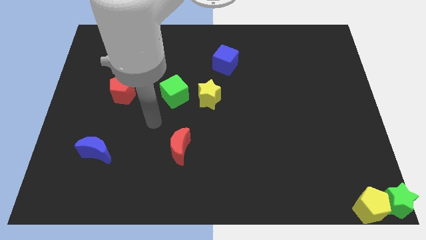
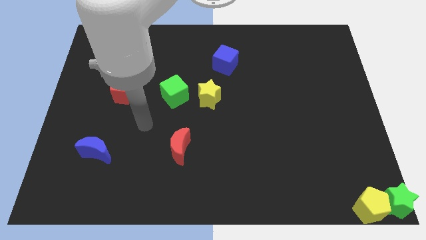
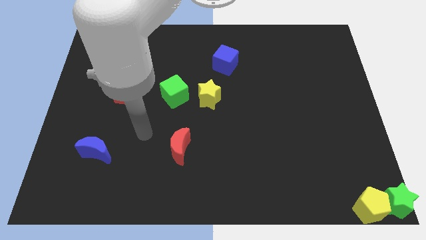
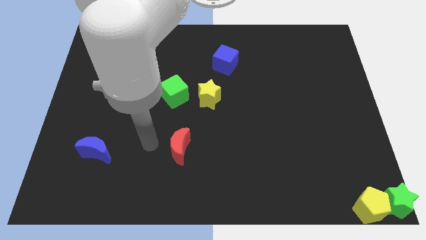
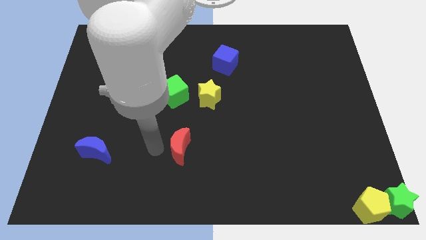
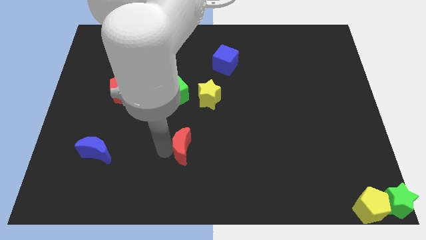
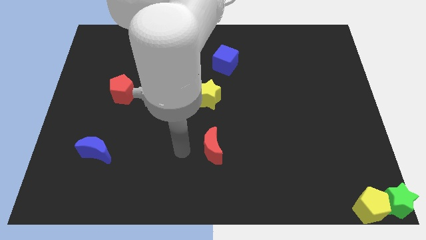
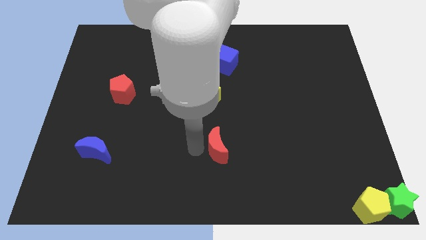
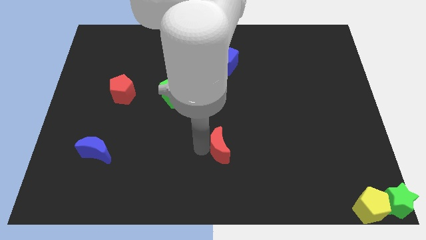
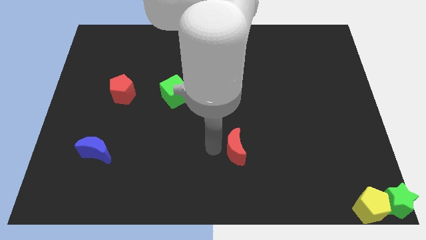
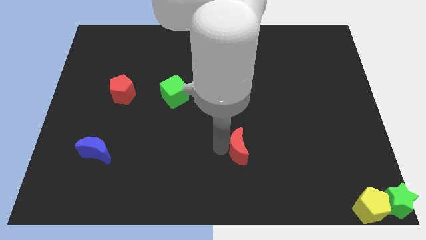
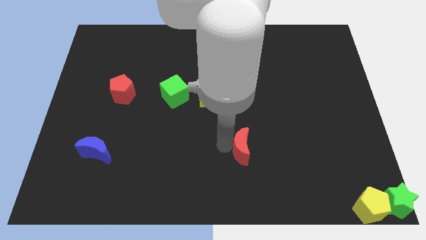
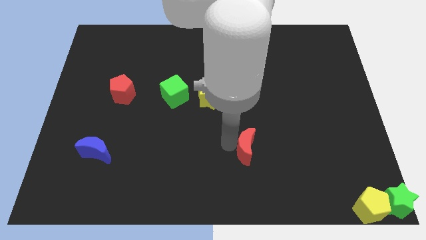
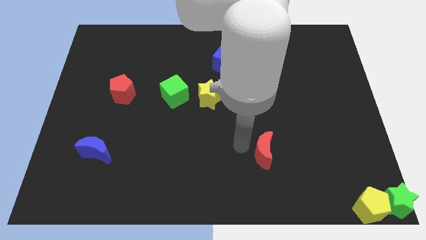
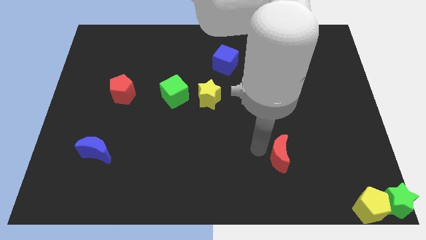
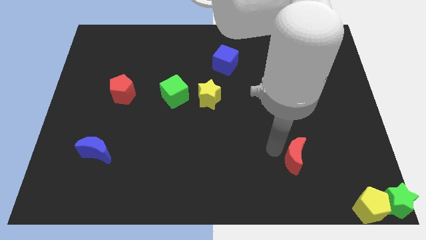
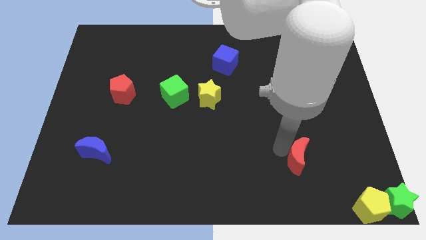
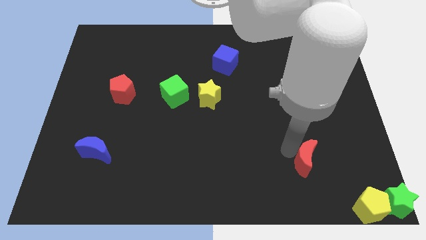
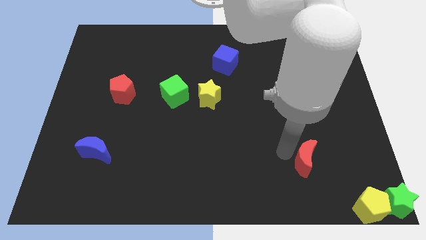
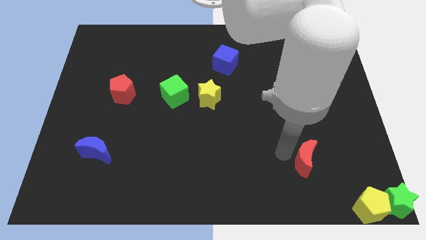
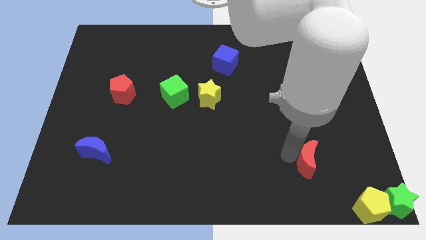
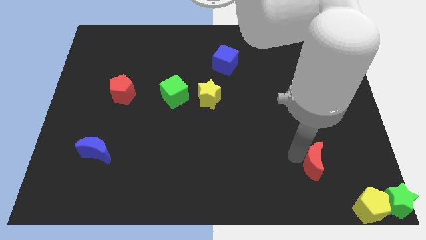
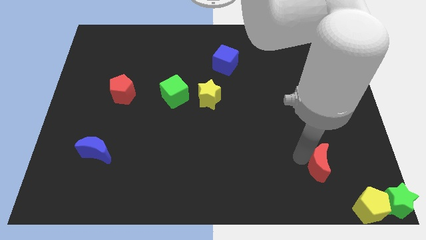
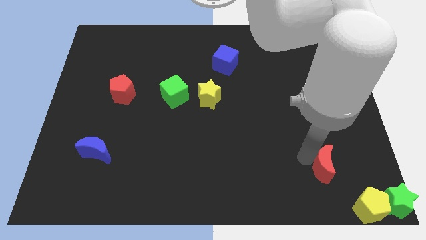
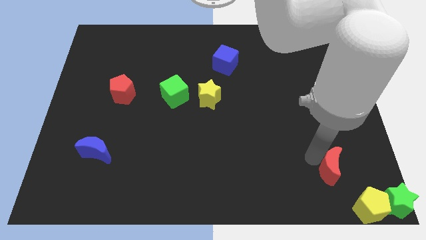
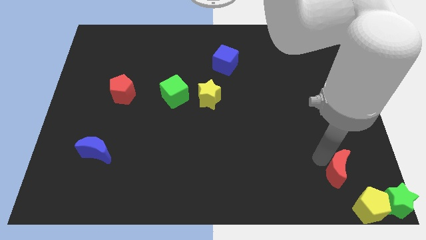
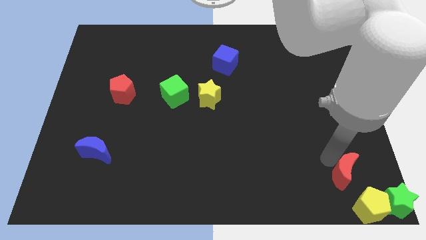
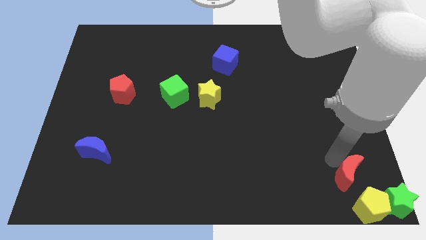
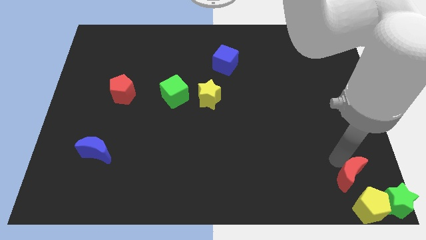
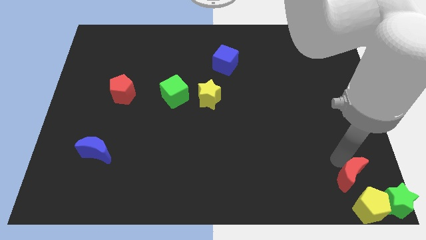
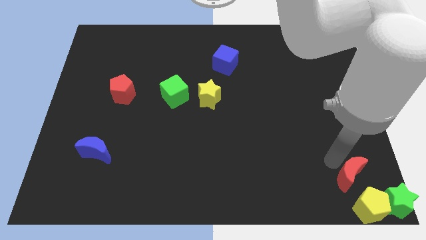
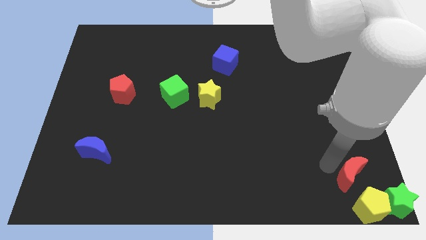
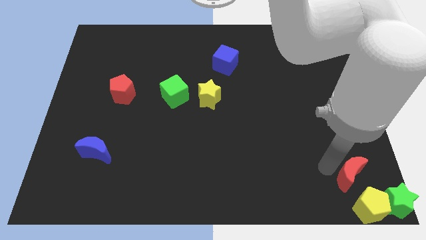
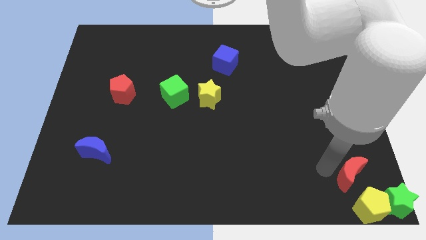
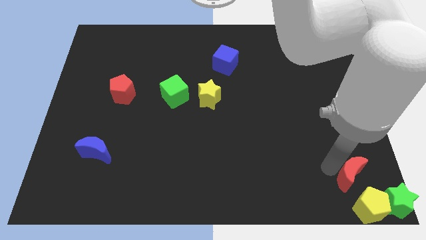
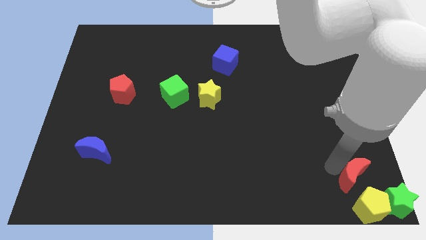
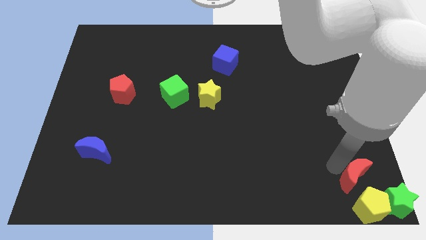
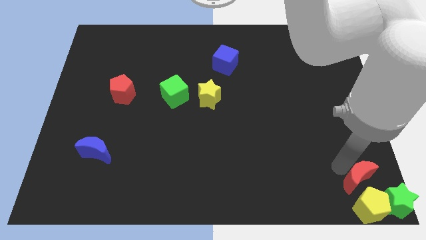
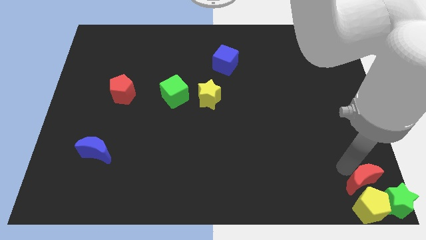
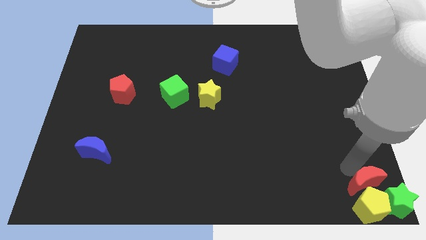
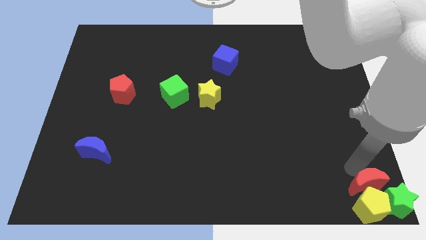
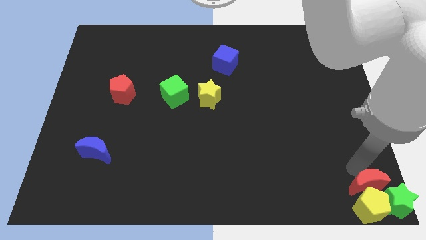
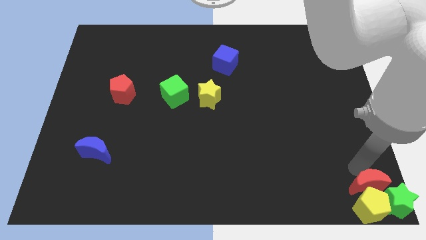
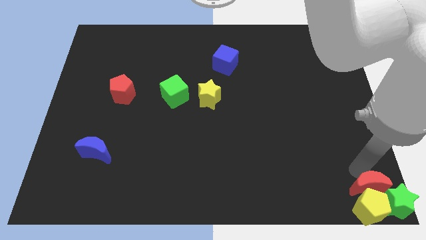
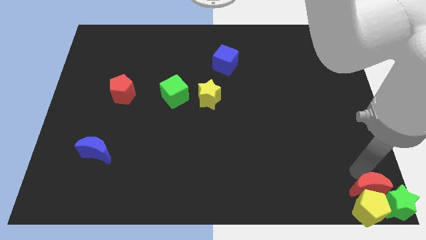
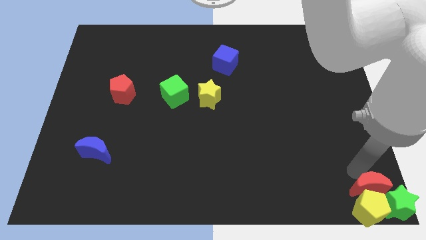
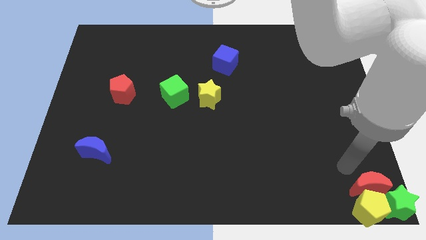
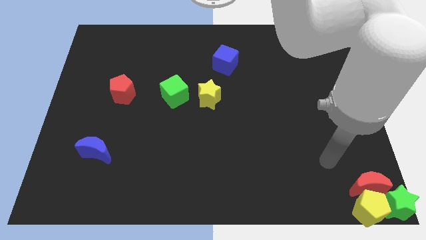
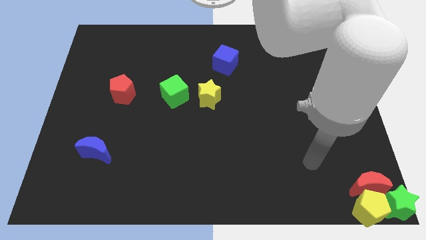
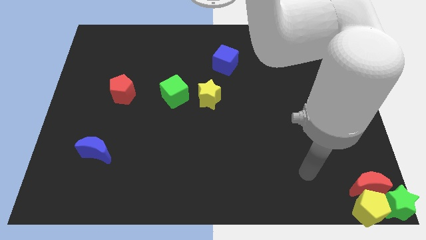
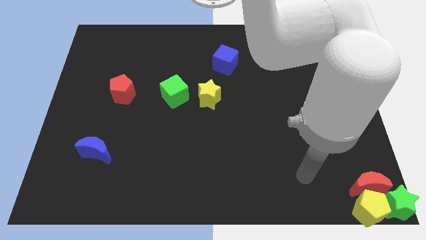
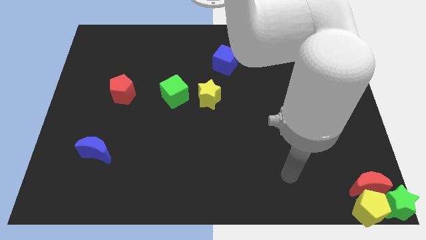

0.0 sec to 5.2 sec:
move the red moon above the yellow pentagon

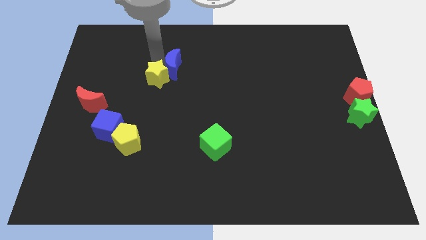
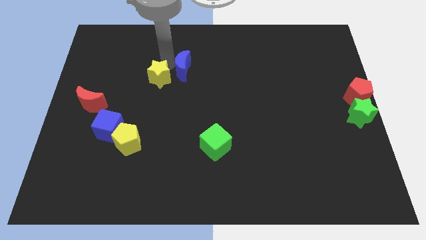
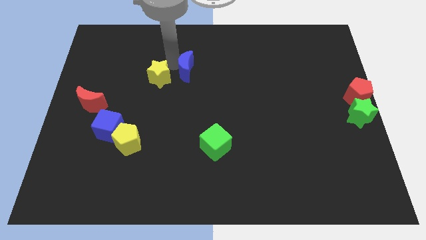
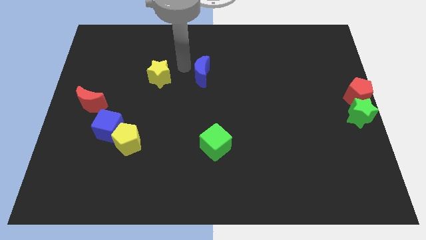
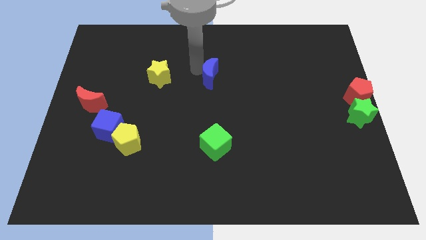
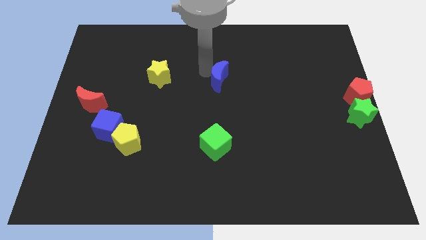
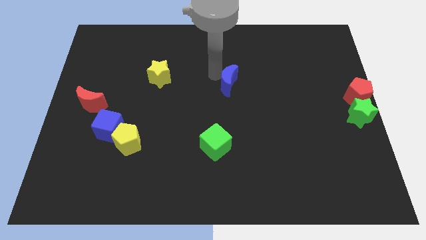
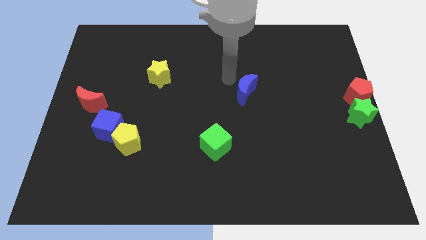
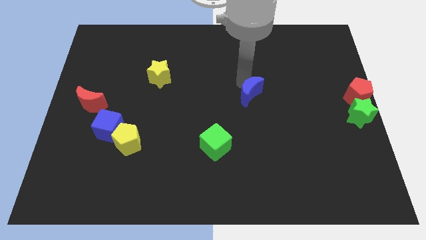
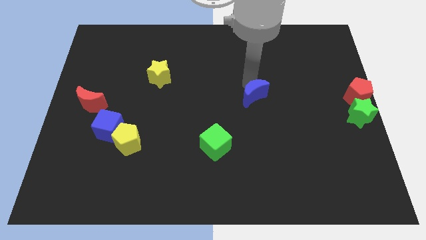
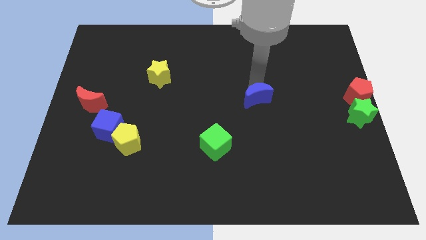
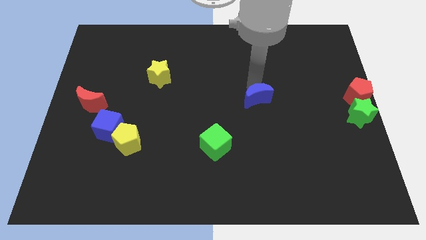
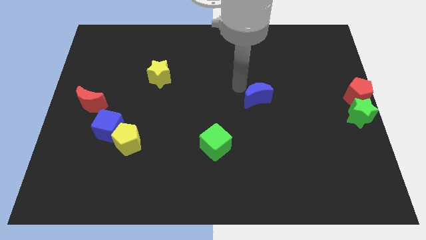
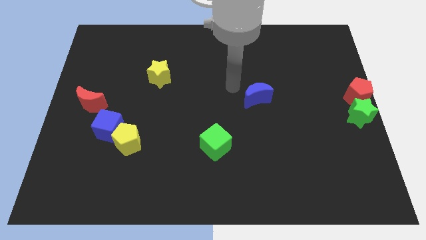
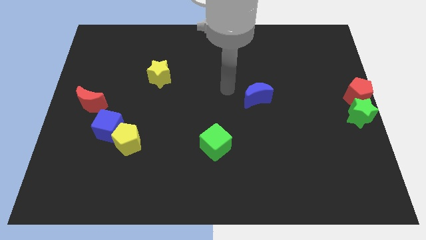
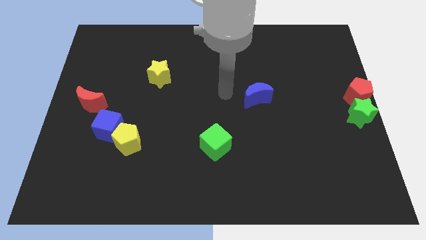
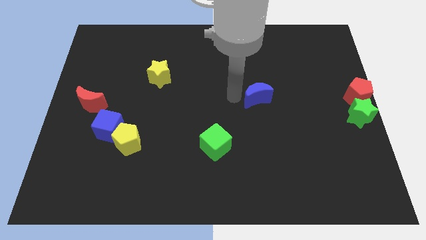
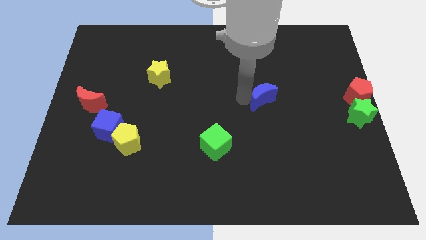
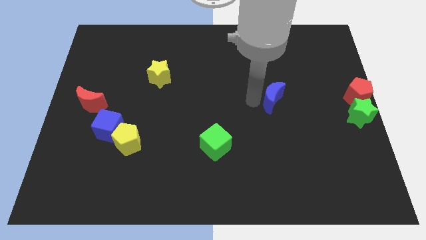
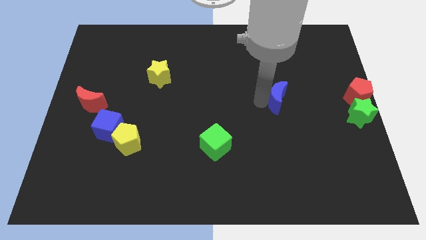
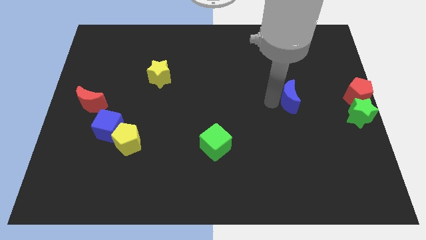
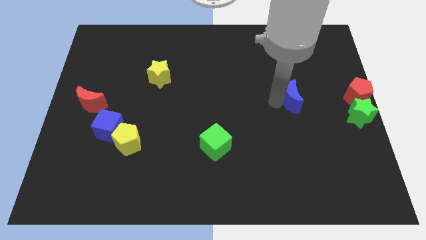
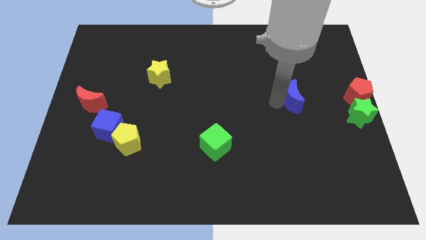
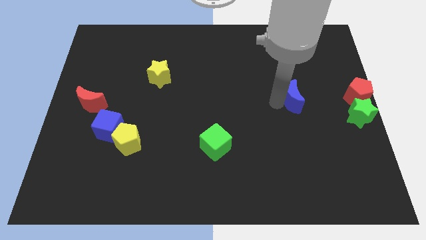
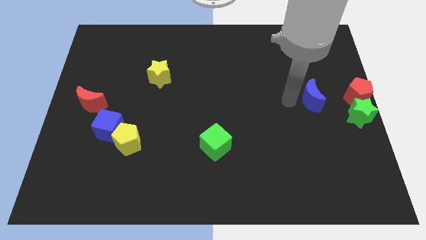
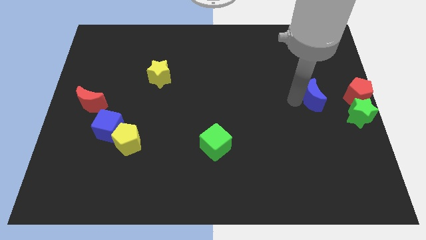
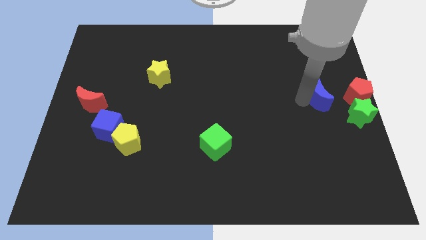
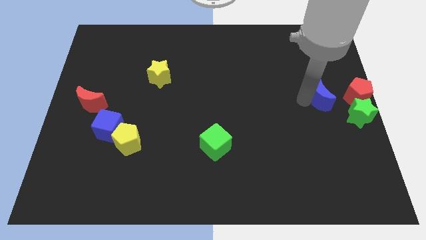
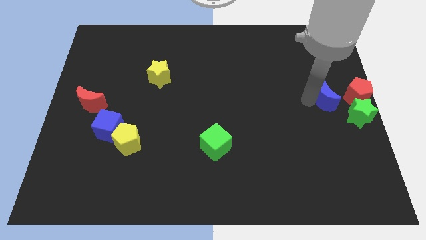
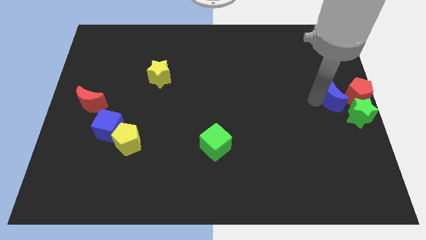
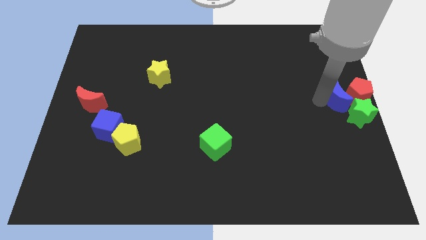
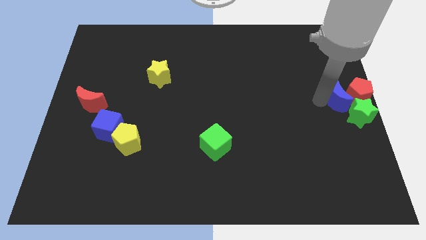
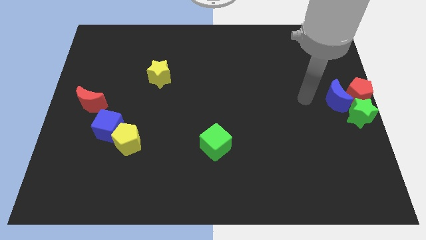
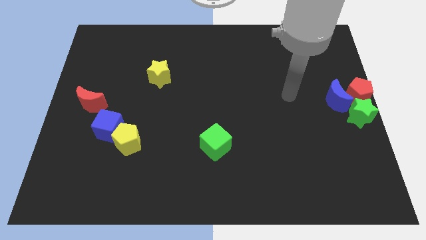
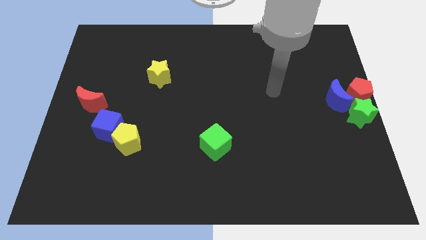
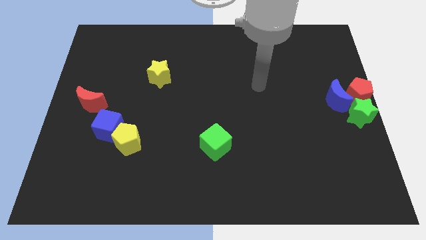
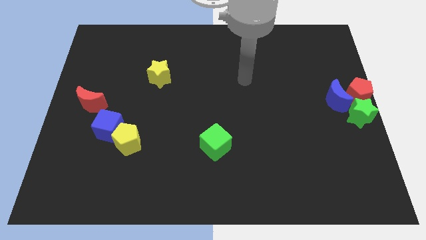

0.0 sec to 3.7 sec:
place blue moon to the left of red pentagon
